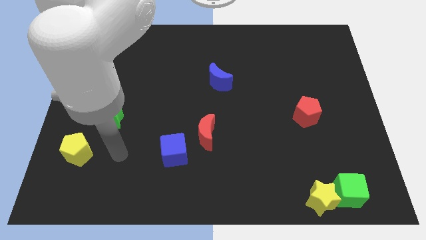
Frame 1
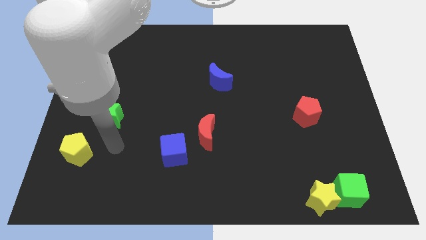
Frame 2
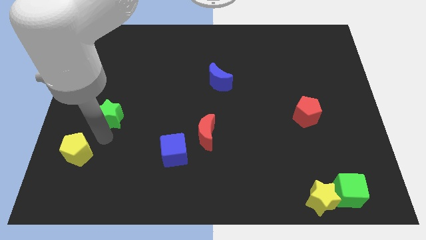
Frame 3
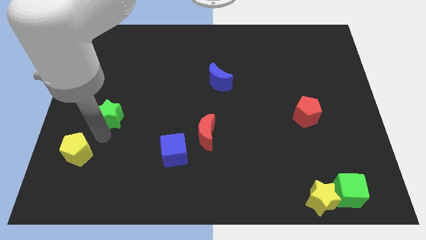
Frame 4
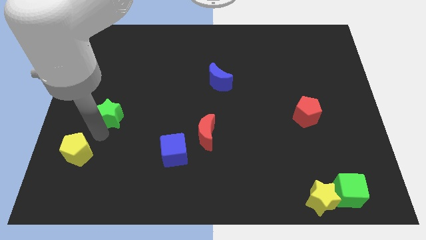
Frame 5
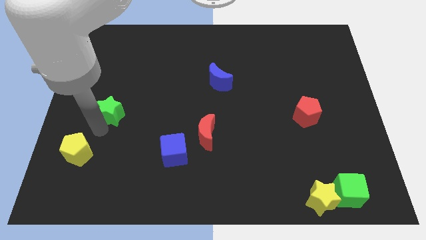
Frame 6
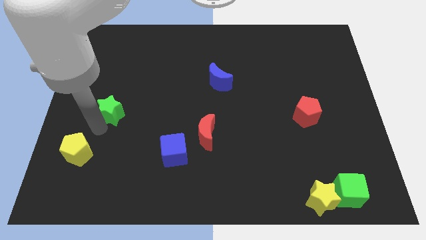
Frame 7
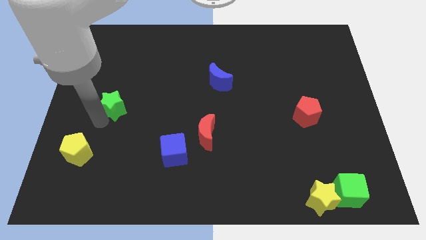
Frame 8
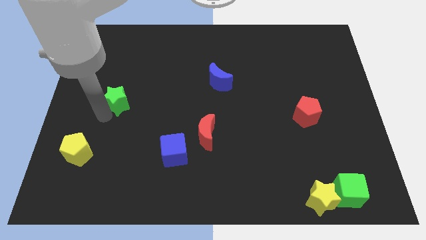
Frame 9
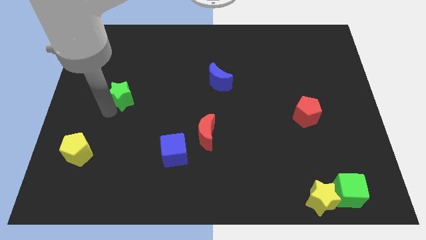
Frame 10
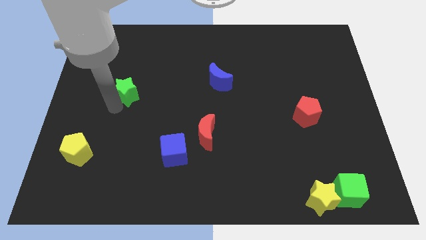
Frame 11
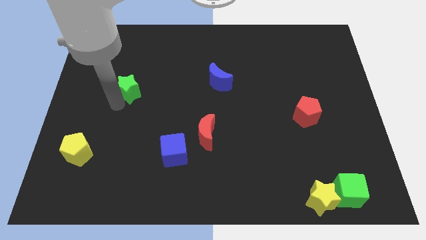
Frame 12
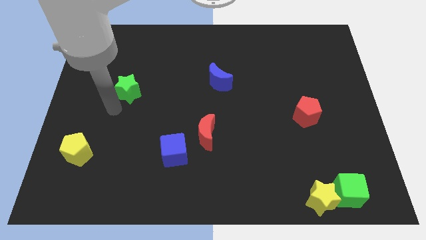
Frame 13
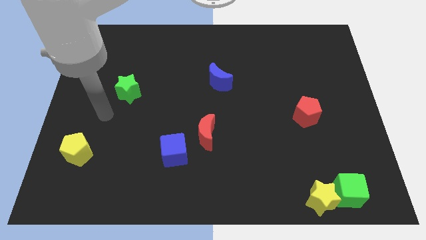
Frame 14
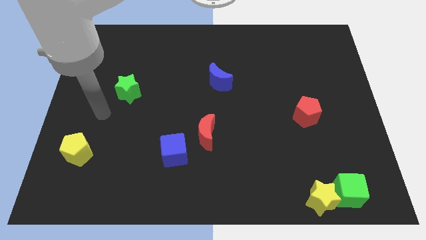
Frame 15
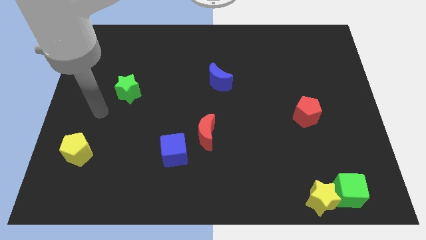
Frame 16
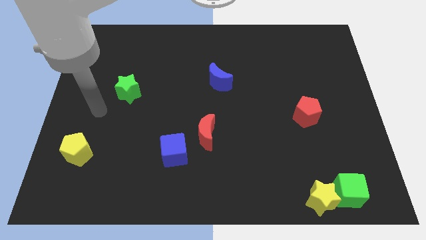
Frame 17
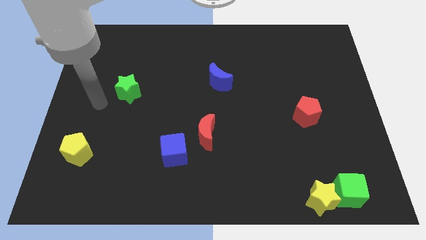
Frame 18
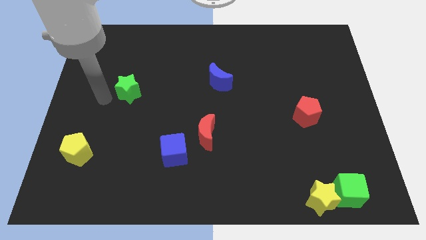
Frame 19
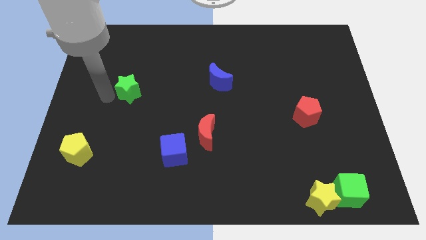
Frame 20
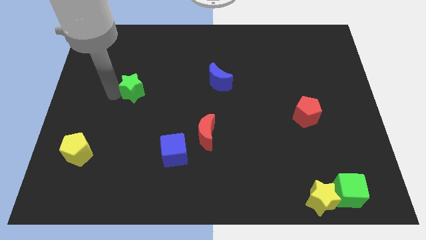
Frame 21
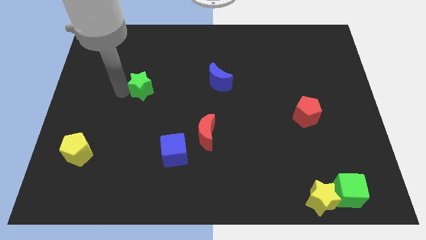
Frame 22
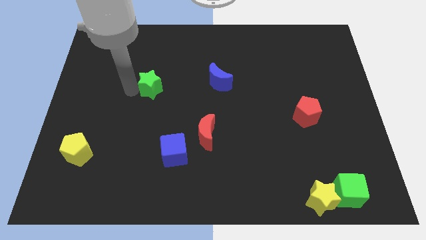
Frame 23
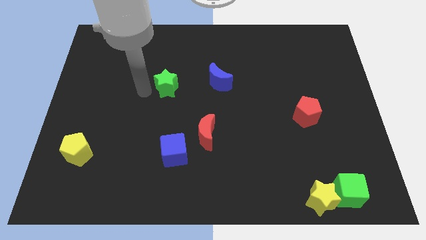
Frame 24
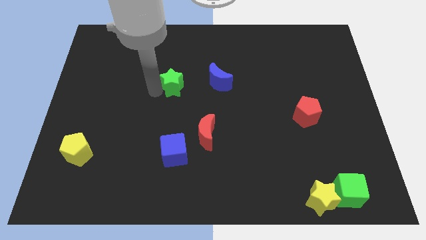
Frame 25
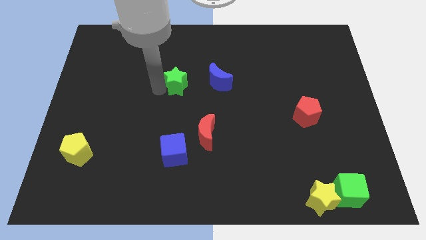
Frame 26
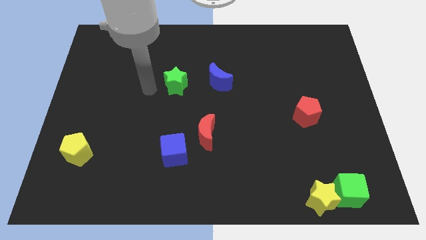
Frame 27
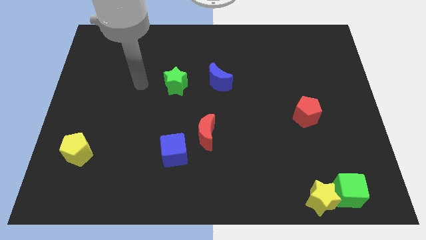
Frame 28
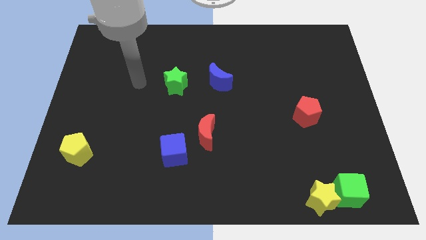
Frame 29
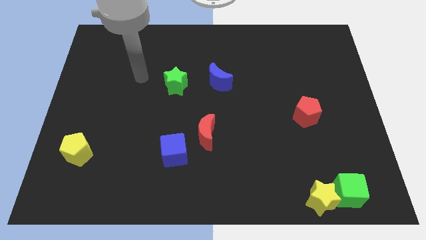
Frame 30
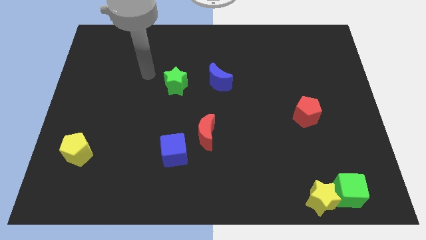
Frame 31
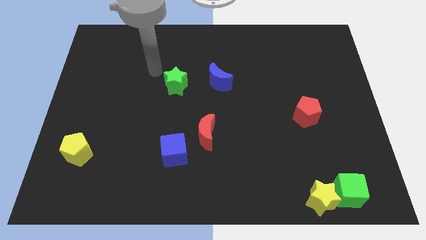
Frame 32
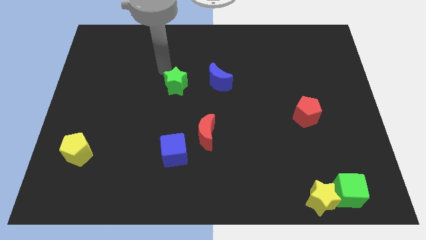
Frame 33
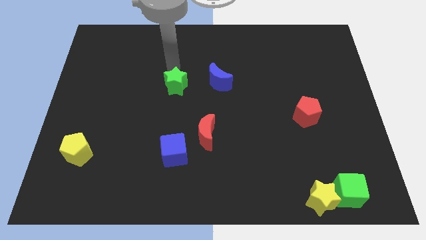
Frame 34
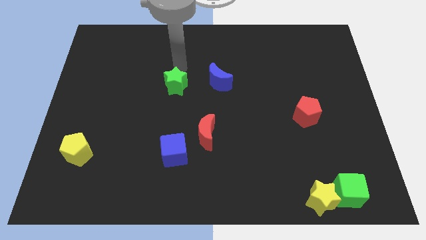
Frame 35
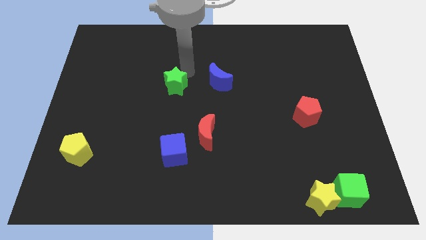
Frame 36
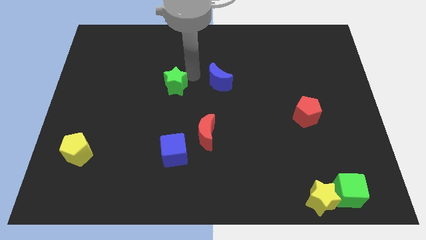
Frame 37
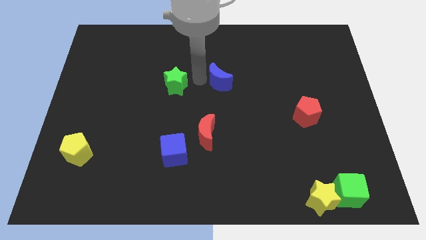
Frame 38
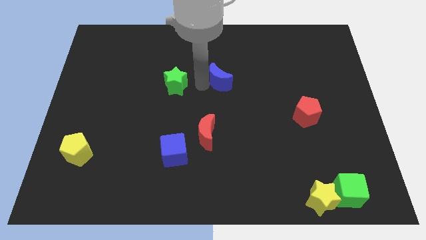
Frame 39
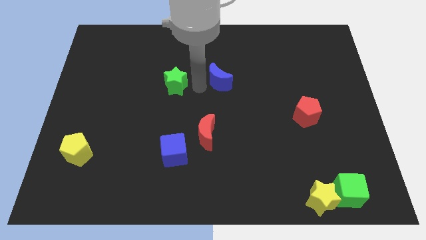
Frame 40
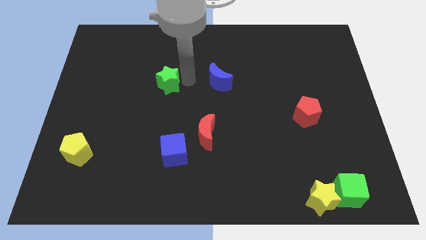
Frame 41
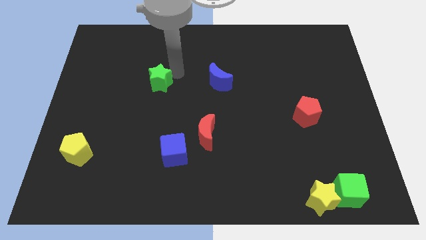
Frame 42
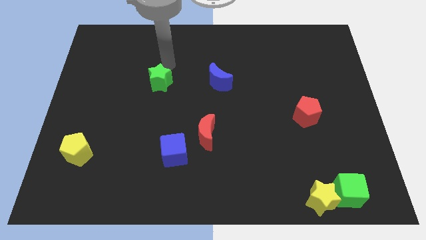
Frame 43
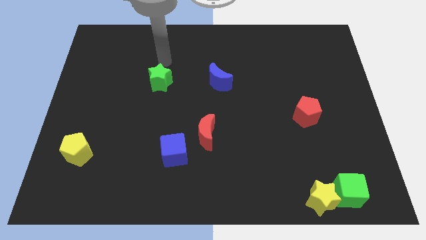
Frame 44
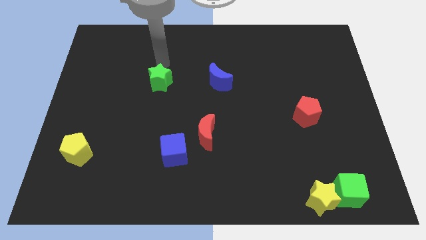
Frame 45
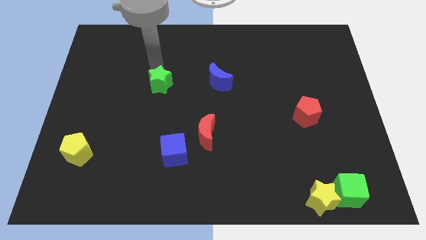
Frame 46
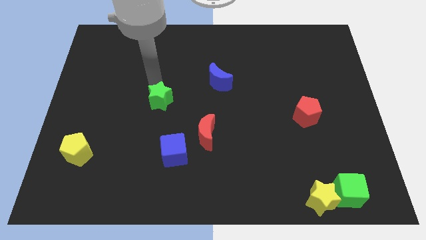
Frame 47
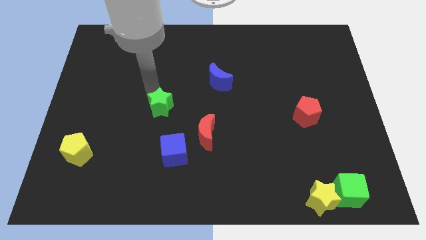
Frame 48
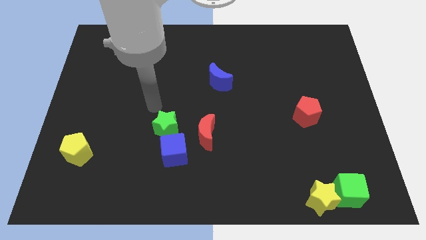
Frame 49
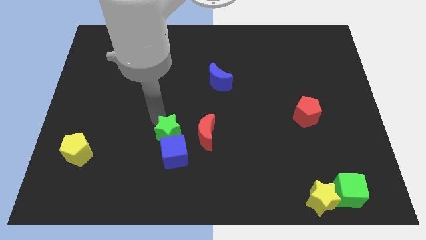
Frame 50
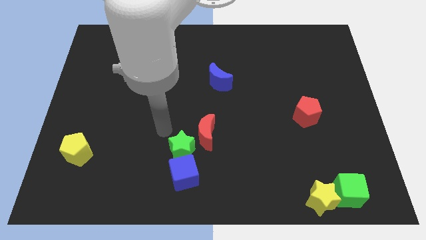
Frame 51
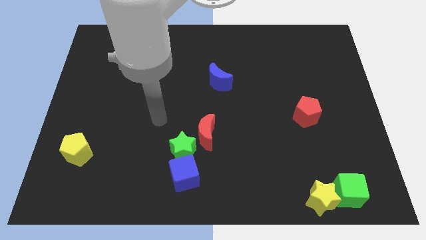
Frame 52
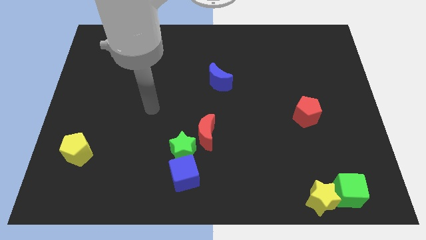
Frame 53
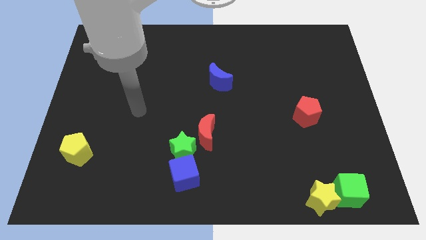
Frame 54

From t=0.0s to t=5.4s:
move the green star above the blue cube

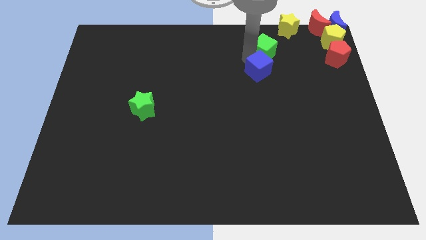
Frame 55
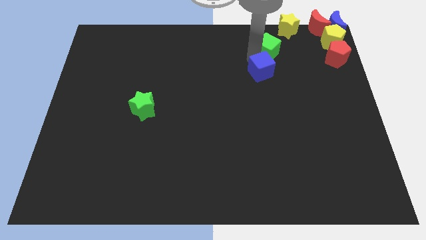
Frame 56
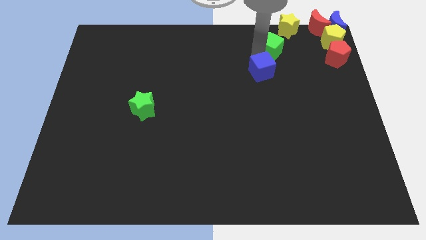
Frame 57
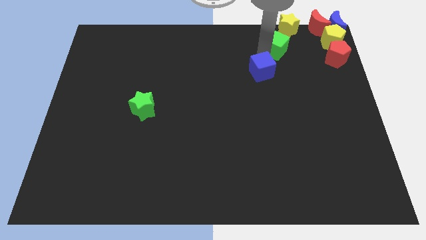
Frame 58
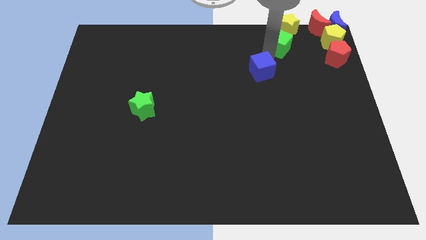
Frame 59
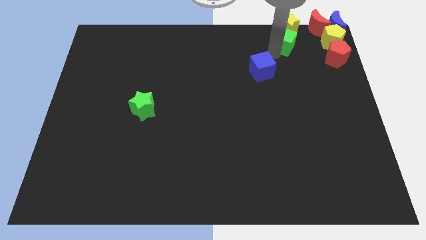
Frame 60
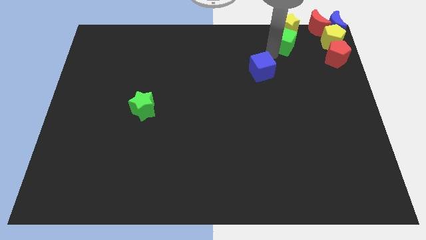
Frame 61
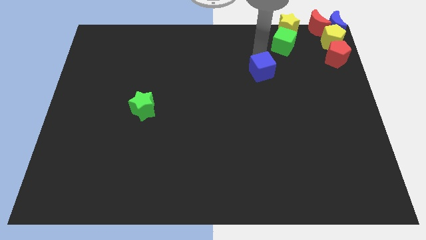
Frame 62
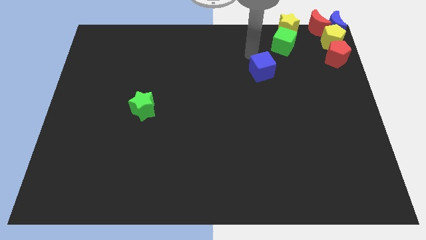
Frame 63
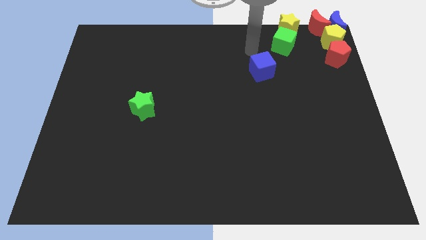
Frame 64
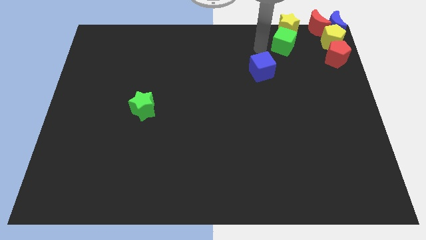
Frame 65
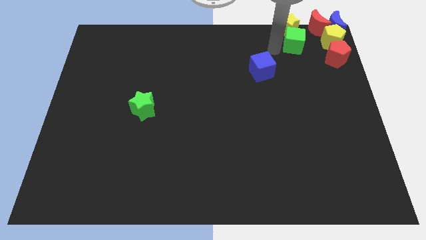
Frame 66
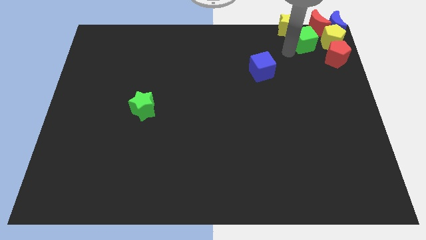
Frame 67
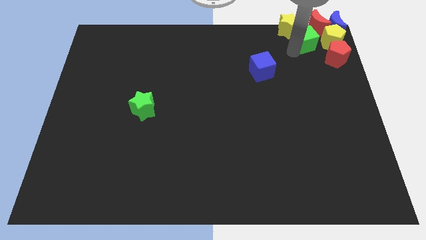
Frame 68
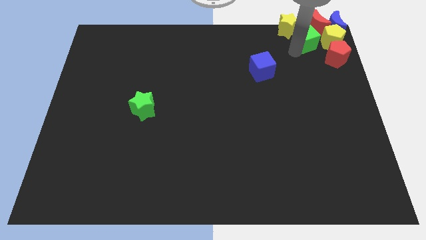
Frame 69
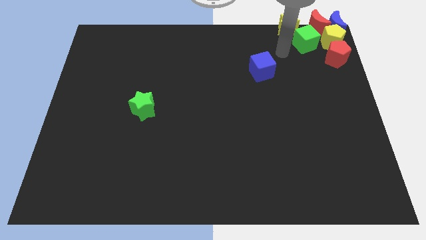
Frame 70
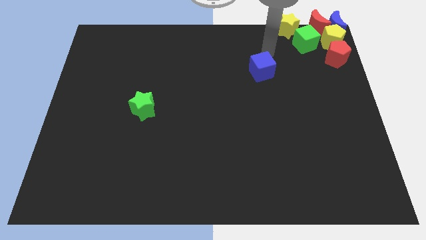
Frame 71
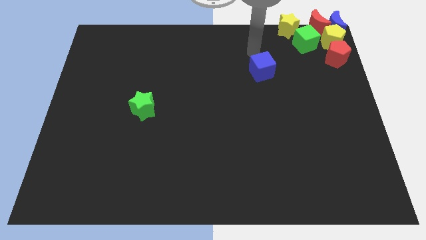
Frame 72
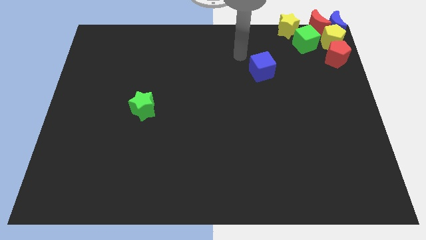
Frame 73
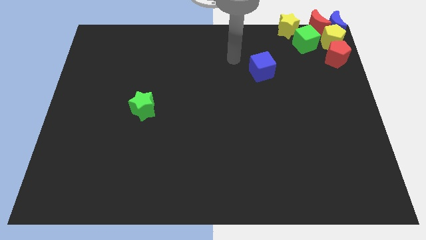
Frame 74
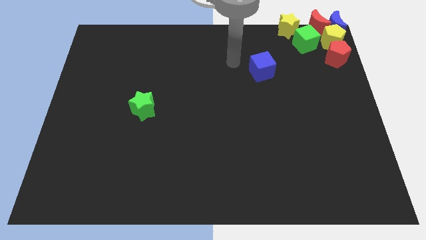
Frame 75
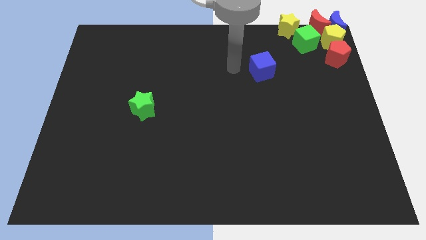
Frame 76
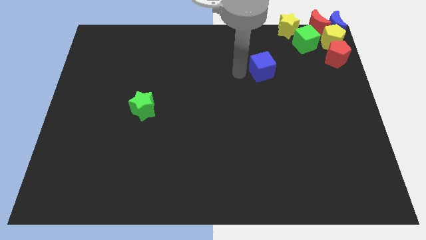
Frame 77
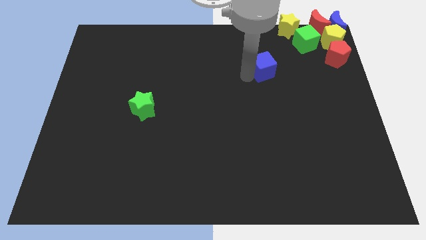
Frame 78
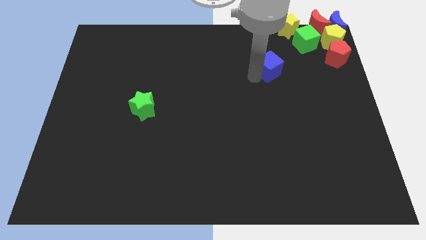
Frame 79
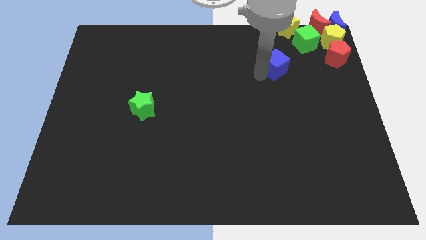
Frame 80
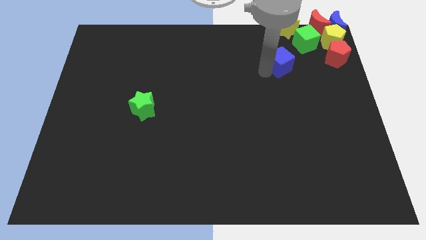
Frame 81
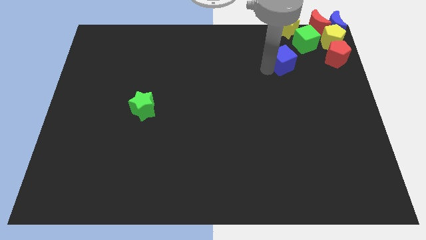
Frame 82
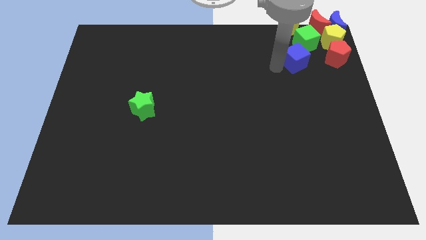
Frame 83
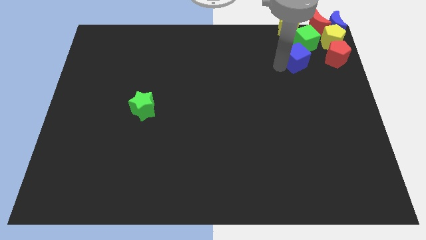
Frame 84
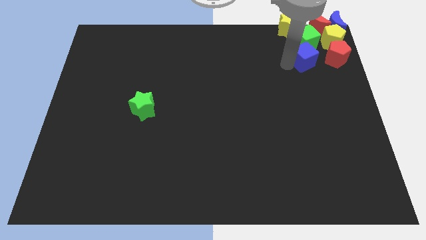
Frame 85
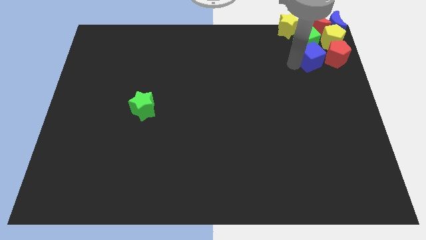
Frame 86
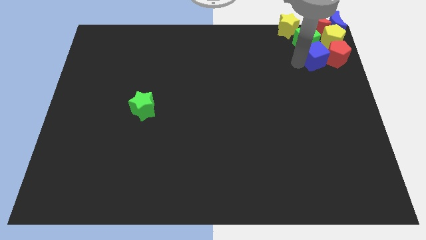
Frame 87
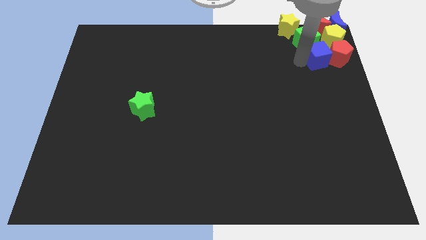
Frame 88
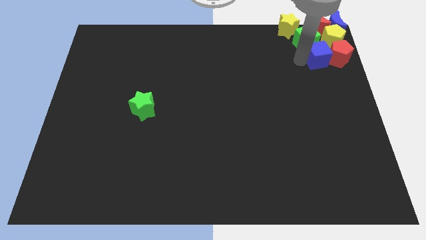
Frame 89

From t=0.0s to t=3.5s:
move the green cube and blue cube close to the yellow and red pentagons
